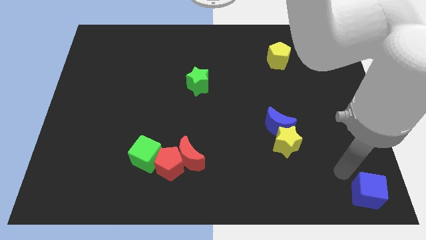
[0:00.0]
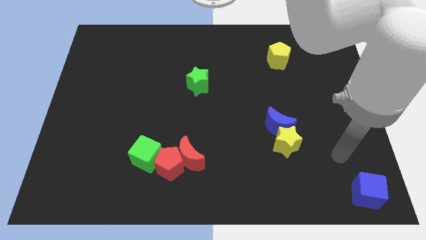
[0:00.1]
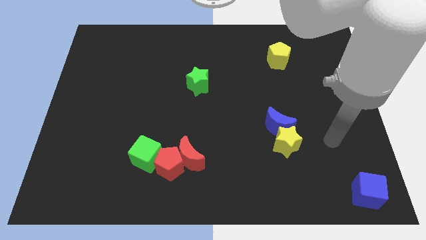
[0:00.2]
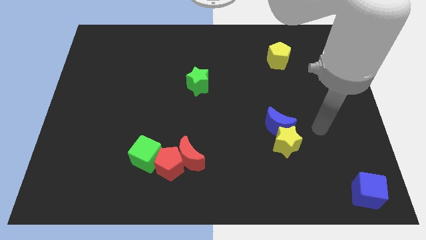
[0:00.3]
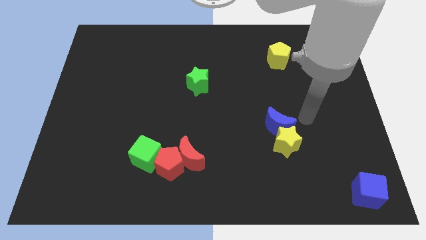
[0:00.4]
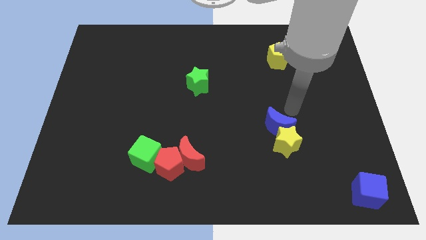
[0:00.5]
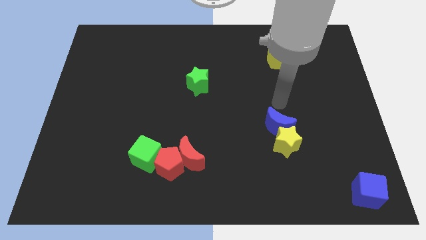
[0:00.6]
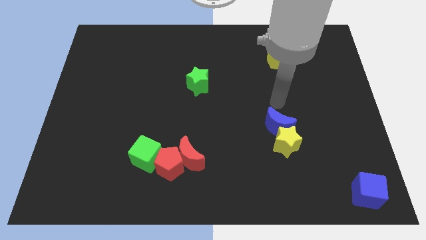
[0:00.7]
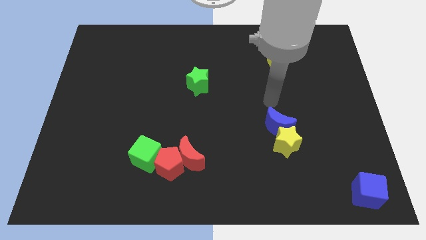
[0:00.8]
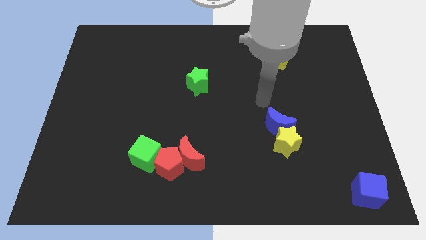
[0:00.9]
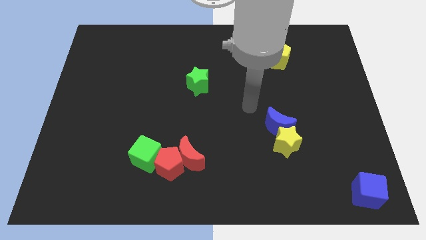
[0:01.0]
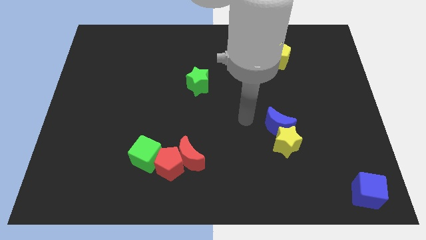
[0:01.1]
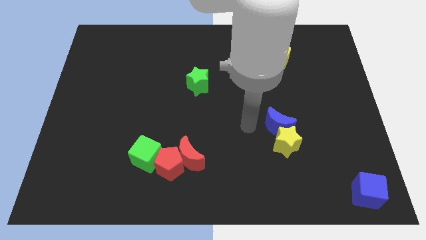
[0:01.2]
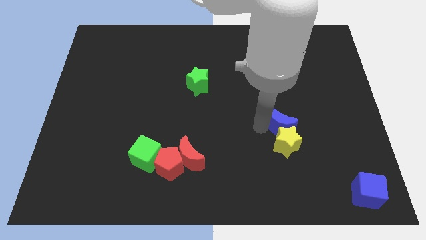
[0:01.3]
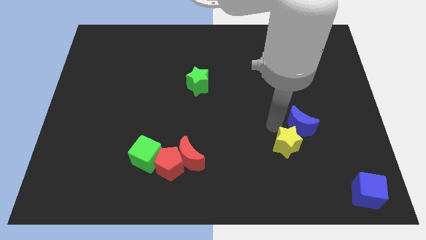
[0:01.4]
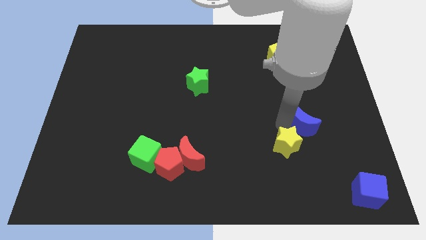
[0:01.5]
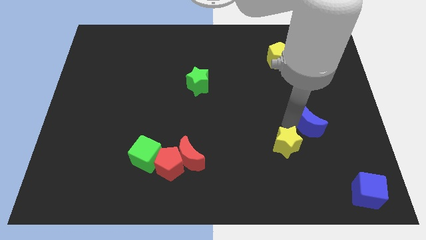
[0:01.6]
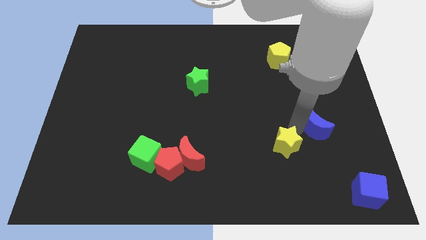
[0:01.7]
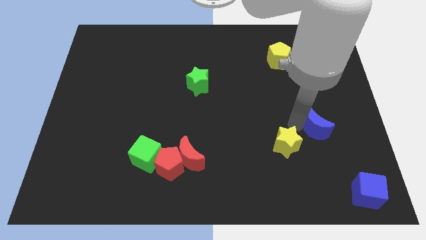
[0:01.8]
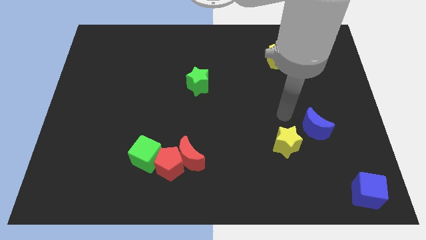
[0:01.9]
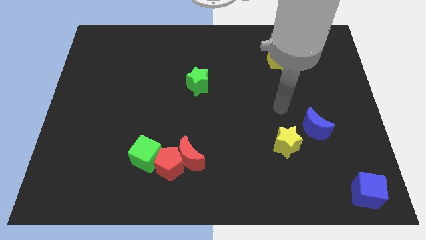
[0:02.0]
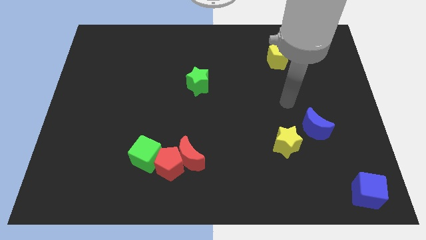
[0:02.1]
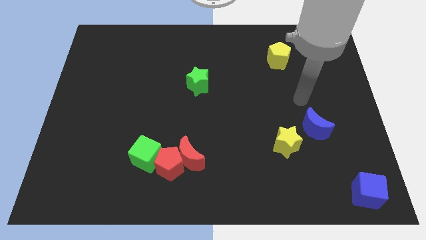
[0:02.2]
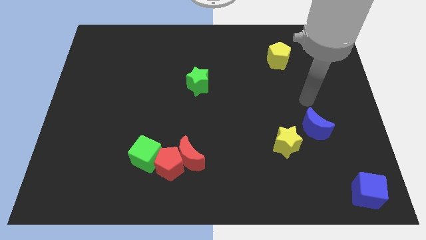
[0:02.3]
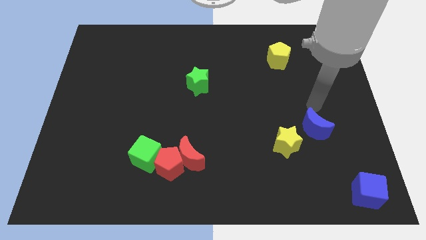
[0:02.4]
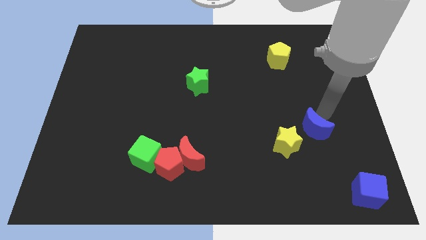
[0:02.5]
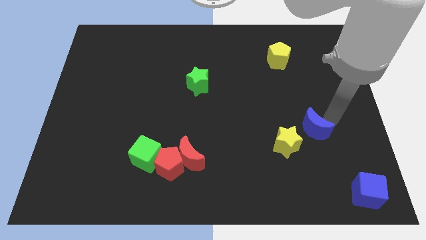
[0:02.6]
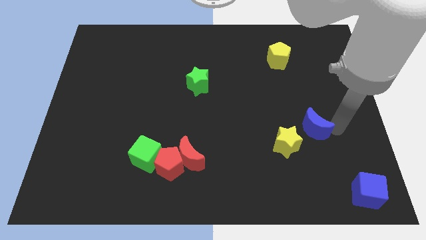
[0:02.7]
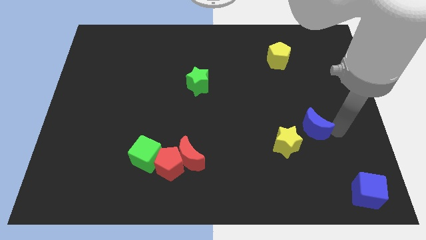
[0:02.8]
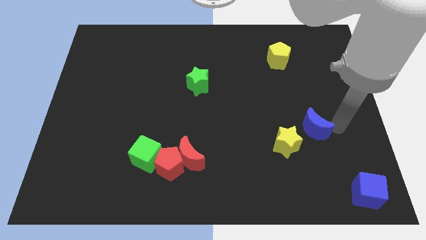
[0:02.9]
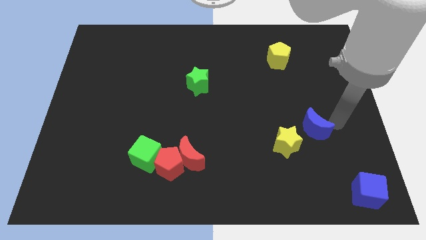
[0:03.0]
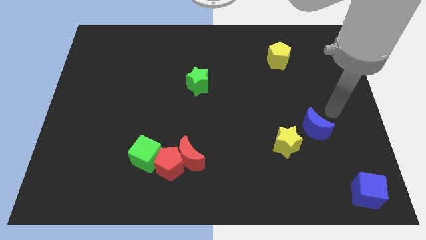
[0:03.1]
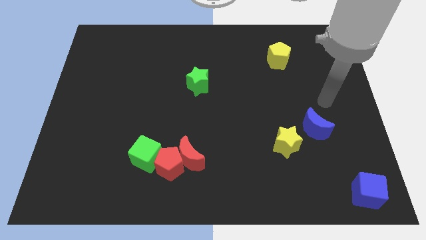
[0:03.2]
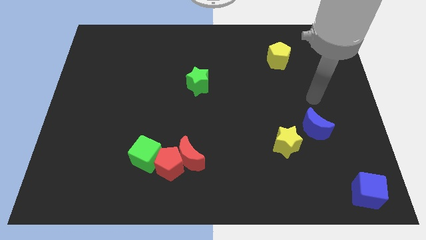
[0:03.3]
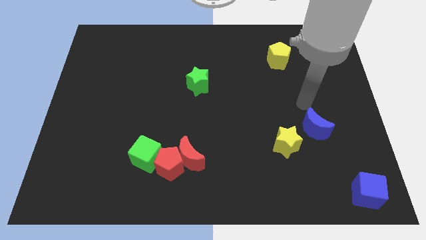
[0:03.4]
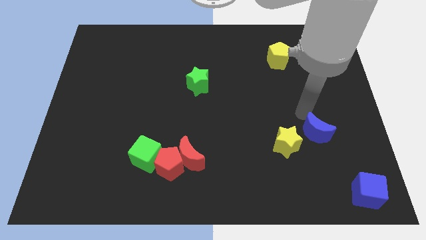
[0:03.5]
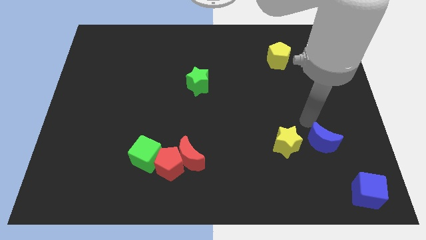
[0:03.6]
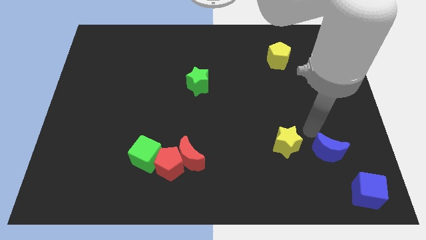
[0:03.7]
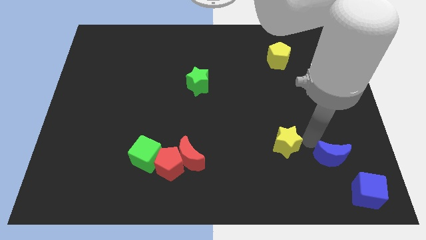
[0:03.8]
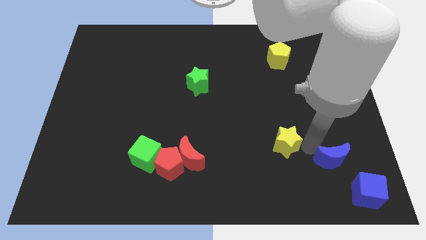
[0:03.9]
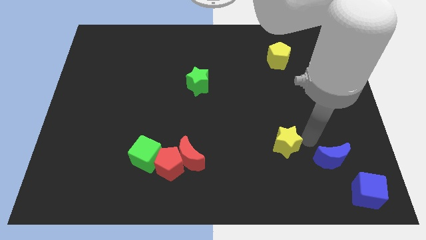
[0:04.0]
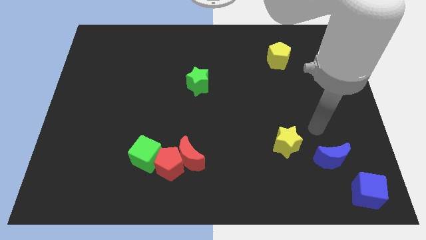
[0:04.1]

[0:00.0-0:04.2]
separate the blue moon from the yellow star

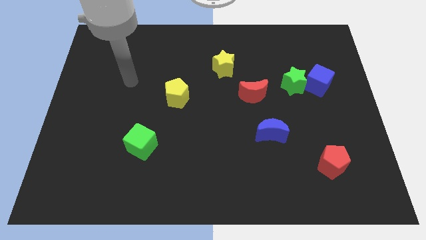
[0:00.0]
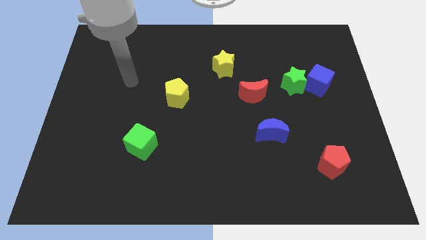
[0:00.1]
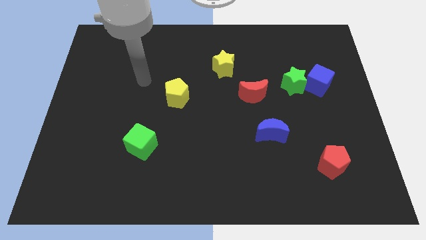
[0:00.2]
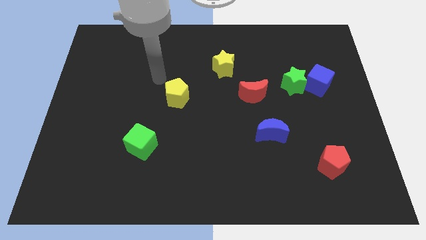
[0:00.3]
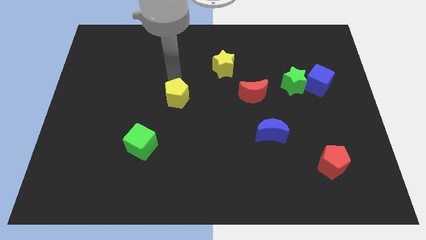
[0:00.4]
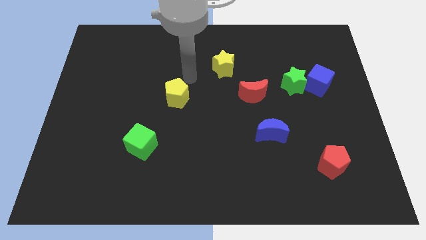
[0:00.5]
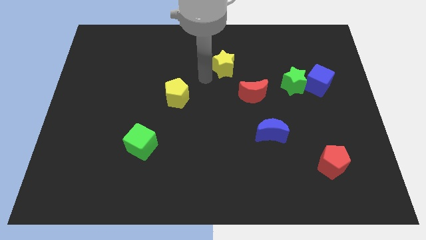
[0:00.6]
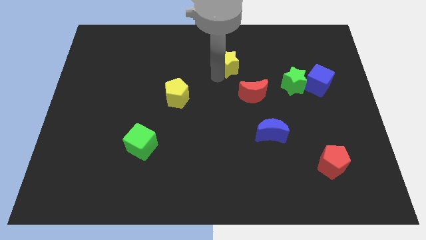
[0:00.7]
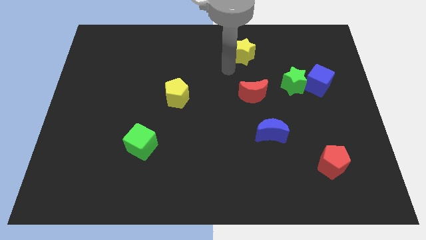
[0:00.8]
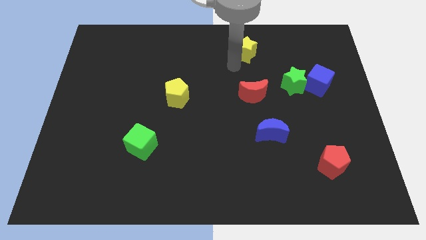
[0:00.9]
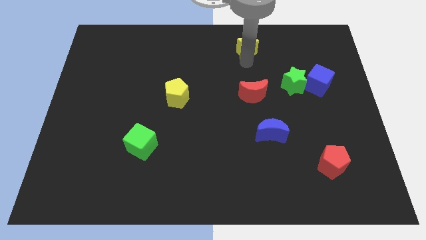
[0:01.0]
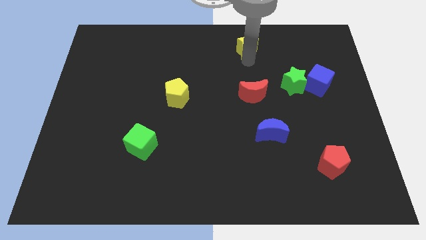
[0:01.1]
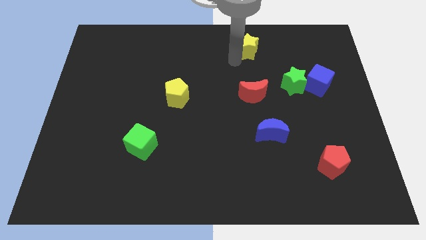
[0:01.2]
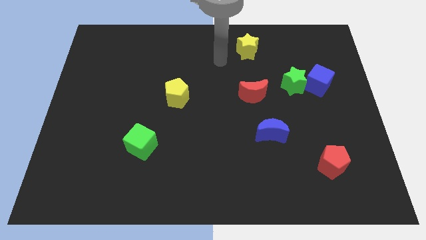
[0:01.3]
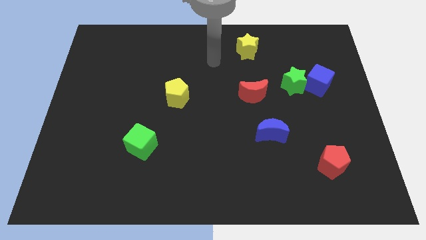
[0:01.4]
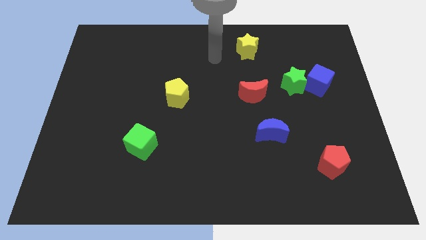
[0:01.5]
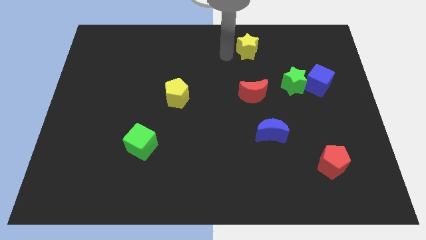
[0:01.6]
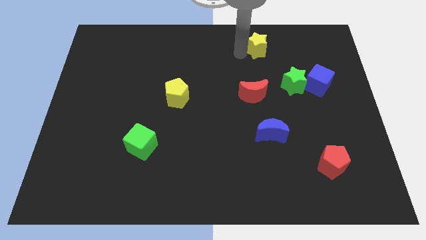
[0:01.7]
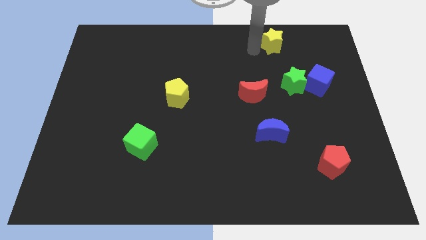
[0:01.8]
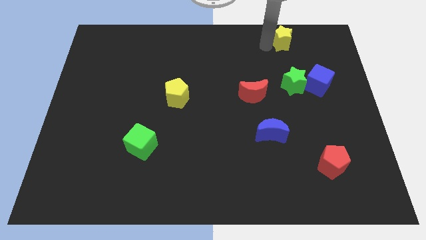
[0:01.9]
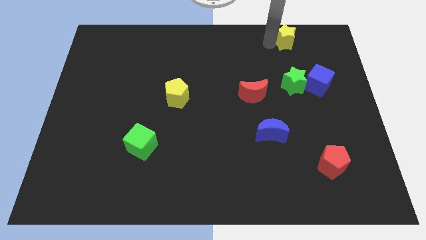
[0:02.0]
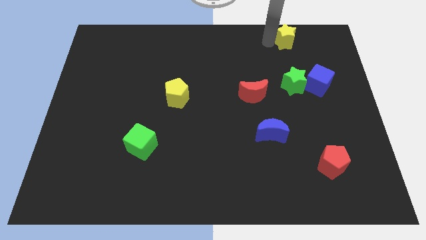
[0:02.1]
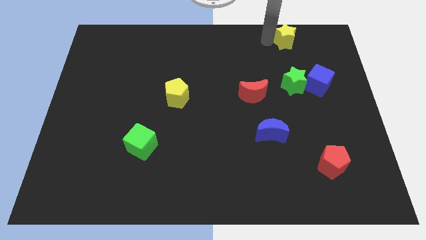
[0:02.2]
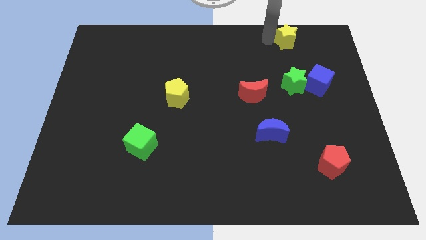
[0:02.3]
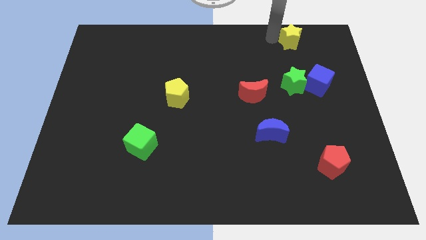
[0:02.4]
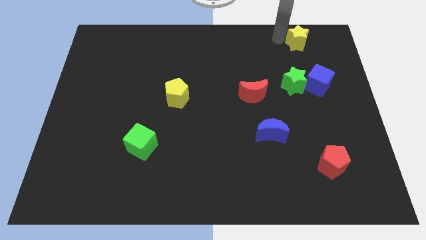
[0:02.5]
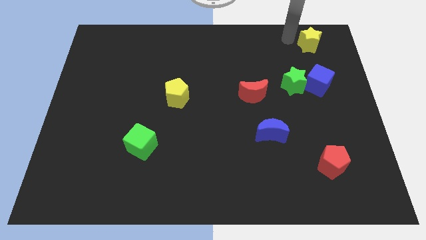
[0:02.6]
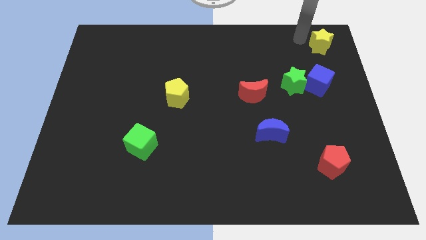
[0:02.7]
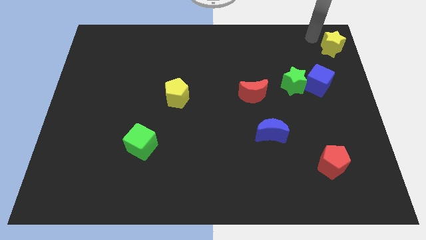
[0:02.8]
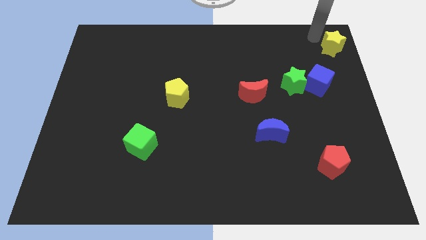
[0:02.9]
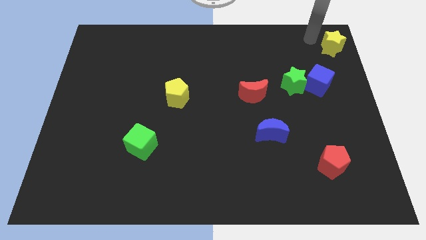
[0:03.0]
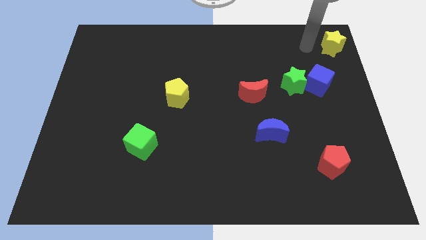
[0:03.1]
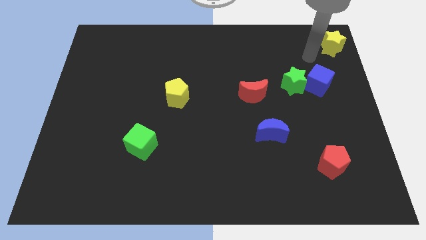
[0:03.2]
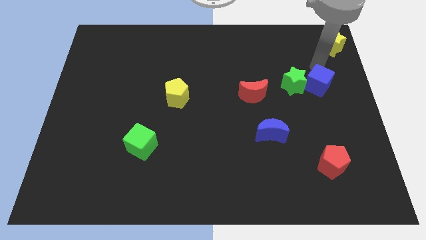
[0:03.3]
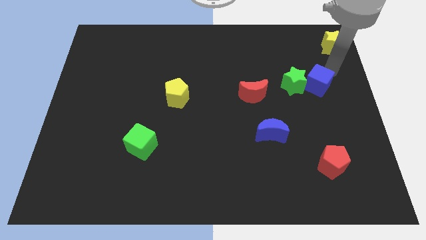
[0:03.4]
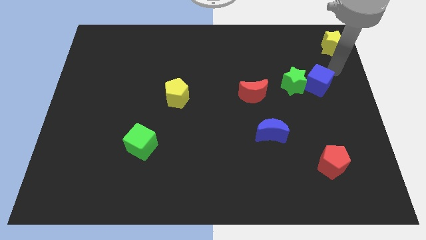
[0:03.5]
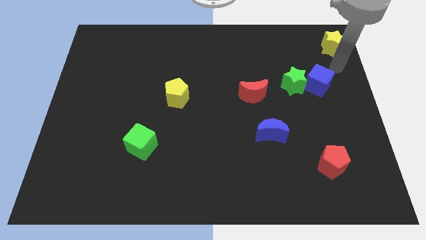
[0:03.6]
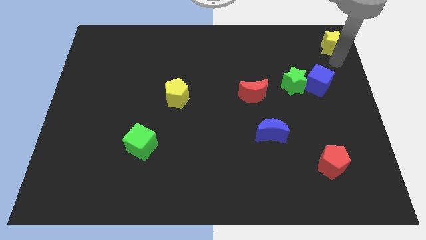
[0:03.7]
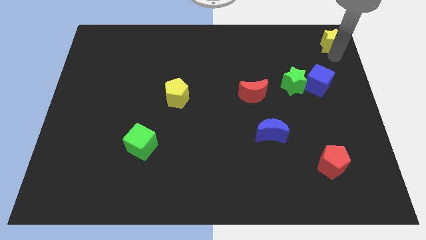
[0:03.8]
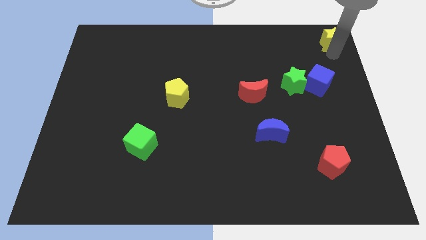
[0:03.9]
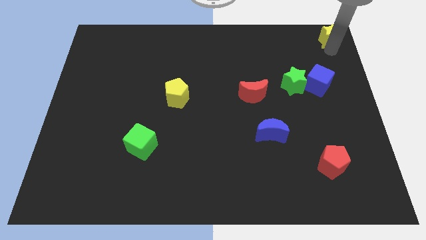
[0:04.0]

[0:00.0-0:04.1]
move the yellow star to the top right

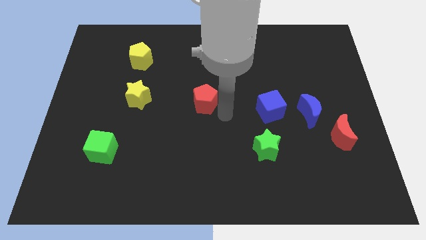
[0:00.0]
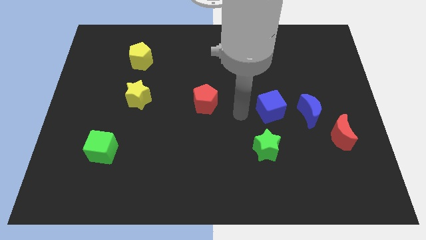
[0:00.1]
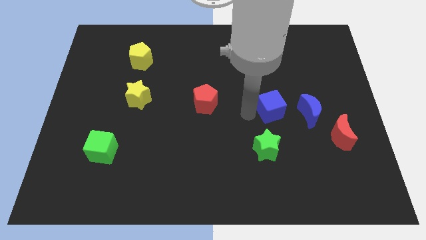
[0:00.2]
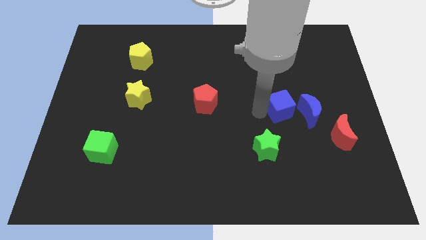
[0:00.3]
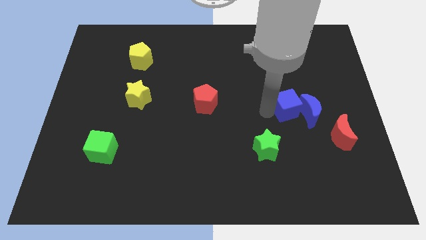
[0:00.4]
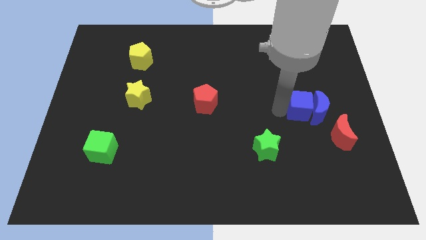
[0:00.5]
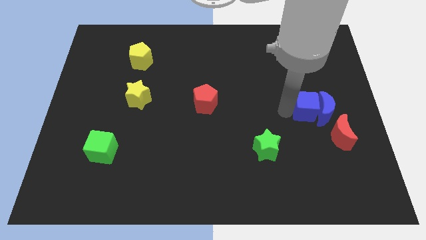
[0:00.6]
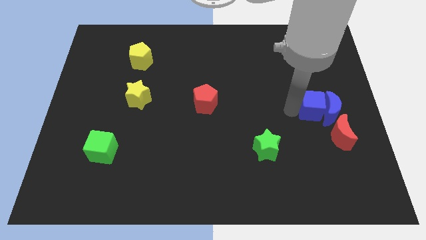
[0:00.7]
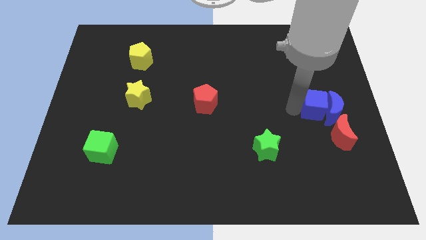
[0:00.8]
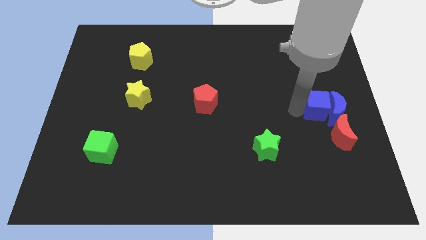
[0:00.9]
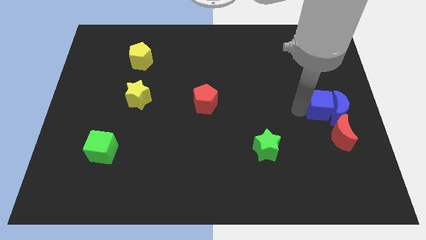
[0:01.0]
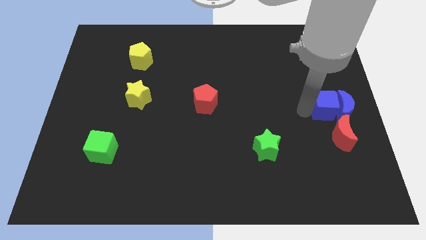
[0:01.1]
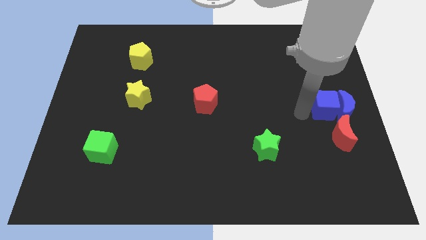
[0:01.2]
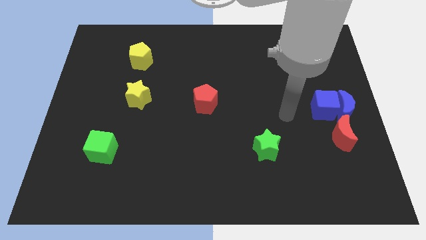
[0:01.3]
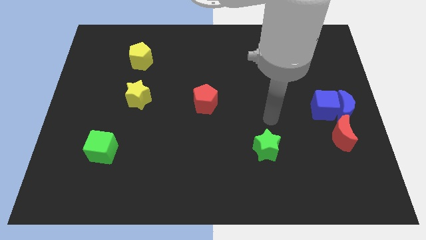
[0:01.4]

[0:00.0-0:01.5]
push the blue cube into the blue moon
